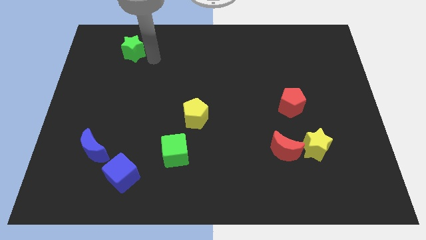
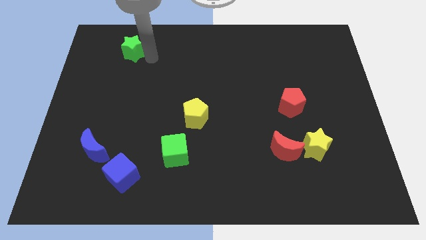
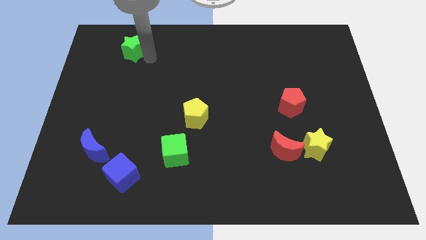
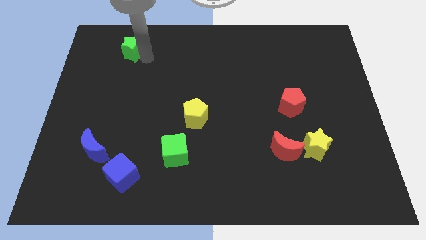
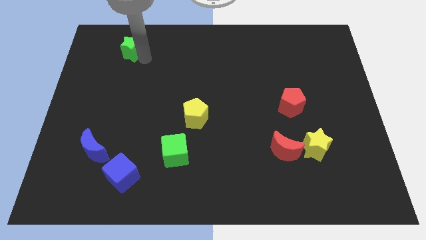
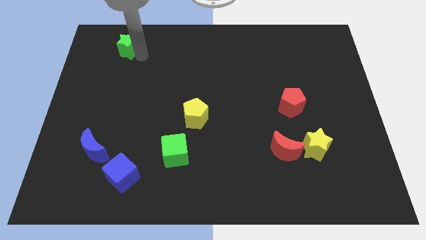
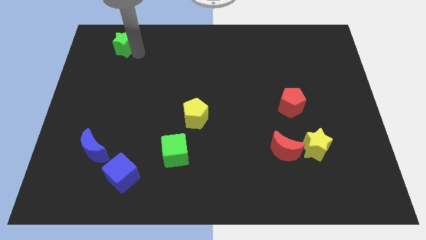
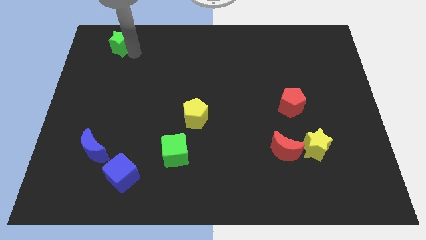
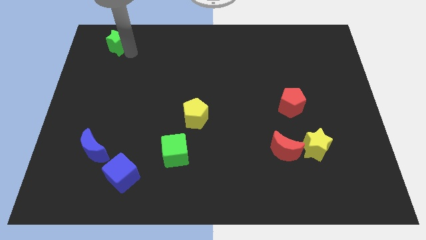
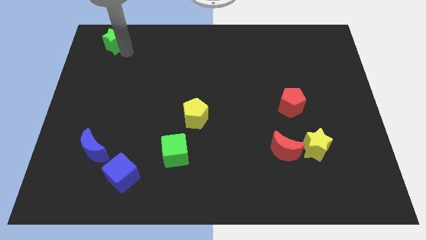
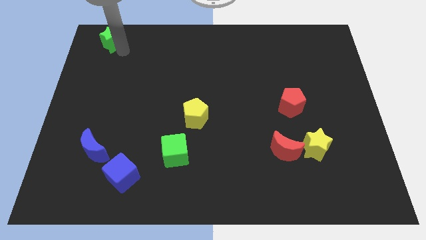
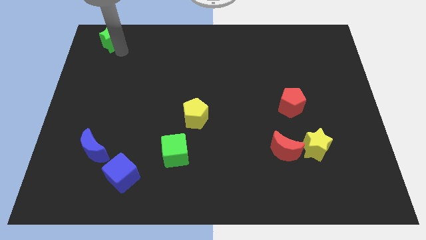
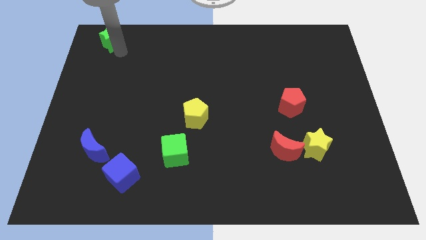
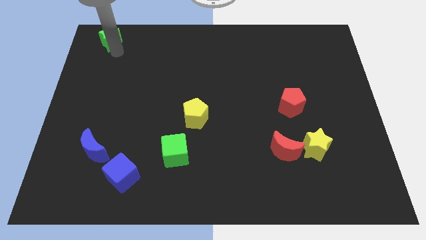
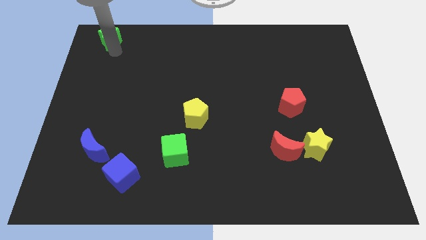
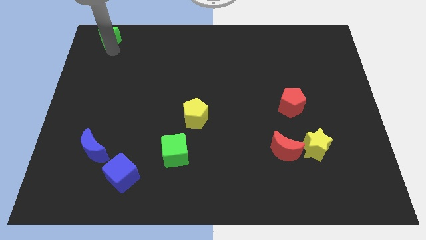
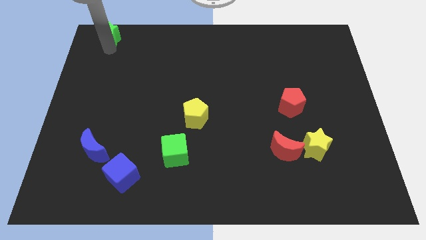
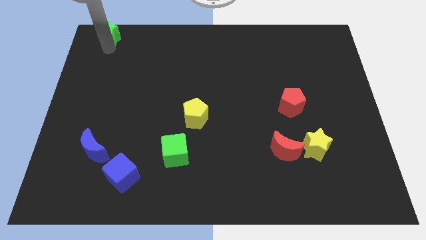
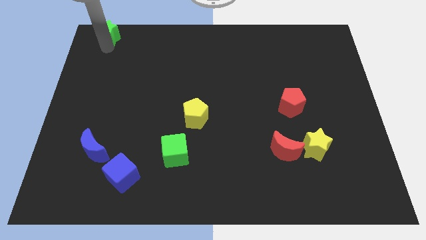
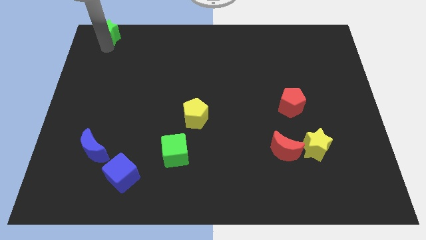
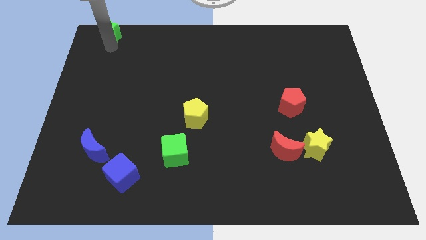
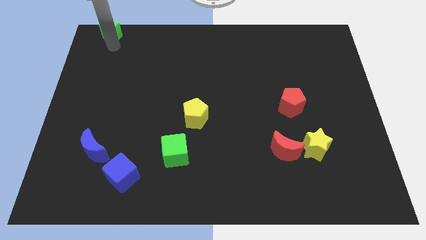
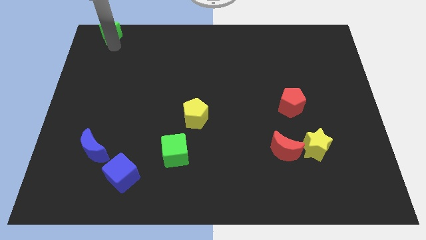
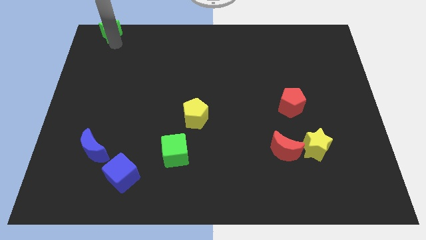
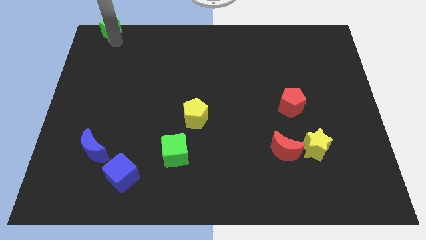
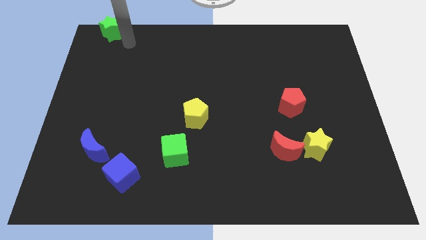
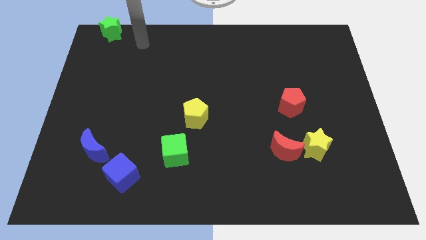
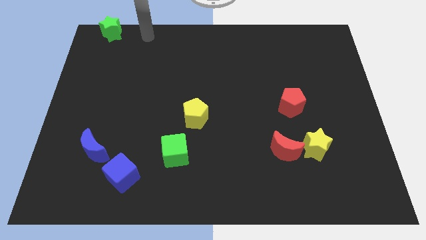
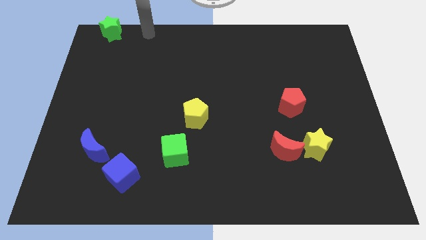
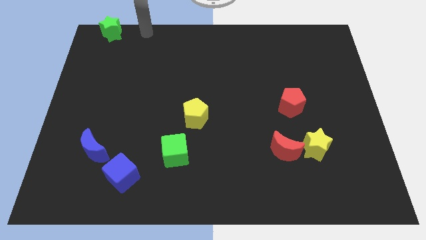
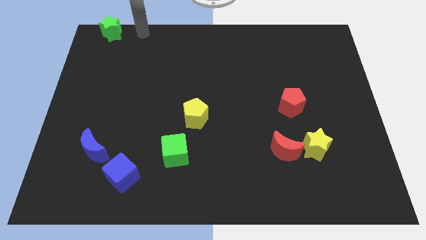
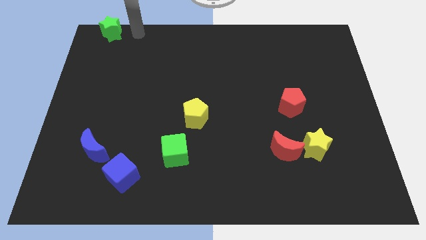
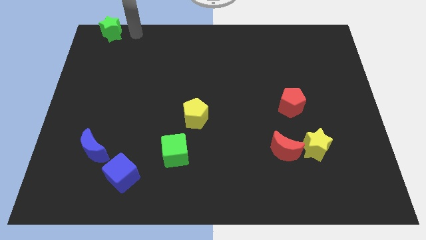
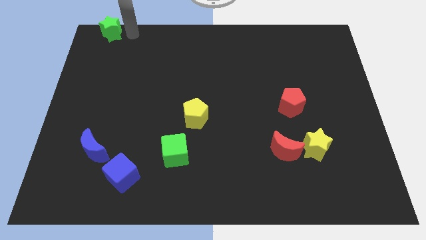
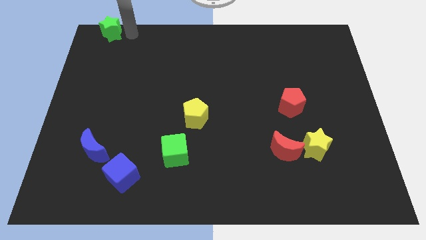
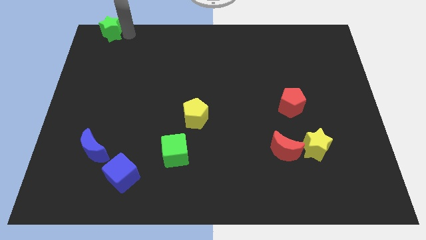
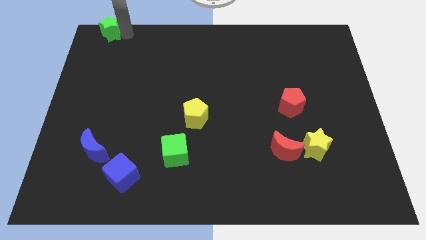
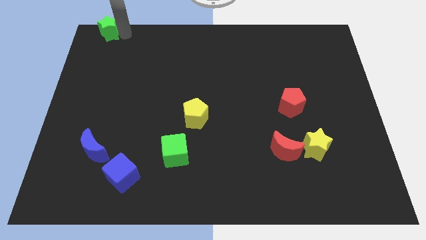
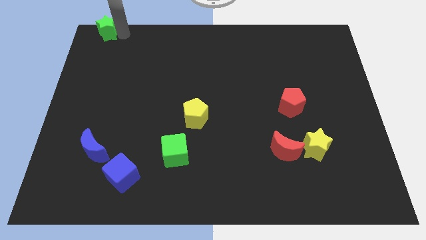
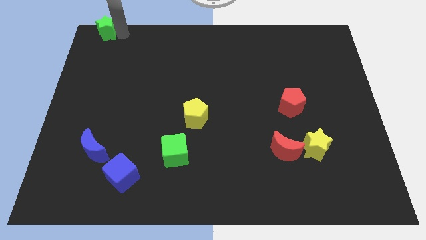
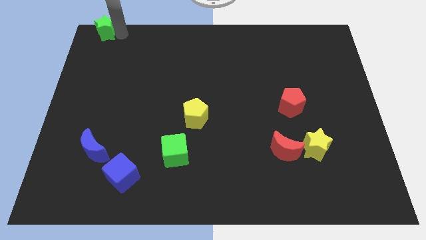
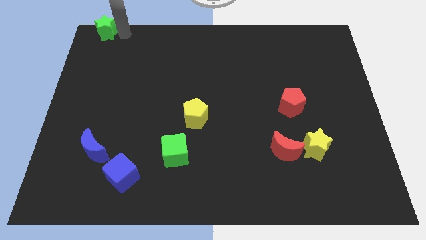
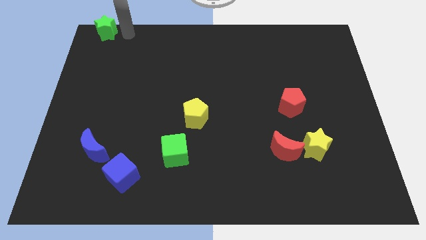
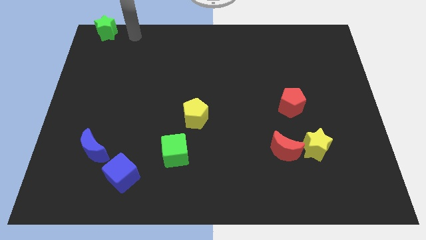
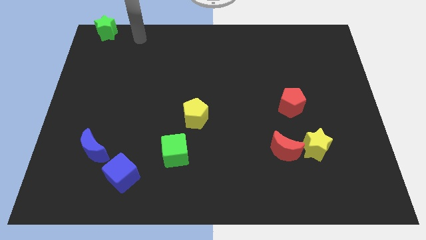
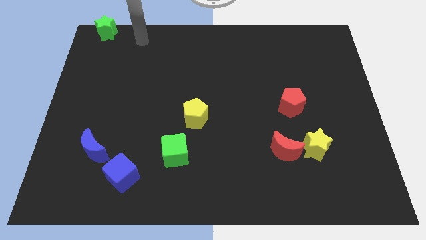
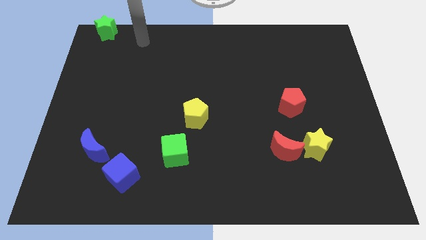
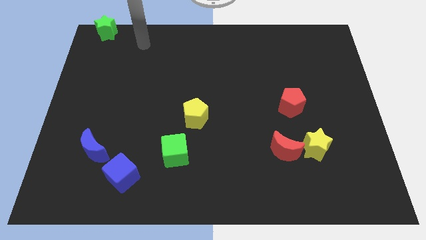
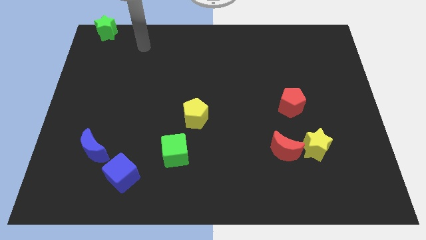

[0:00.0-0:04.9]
move the green star towards top left corner of the board

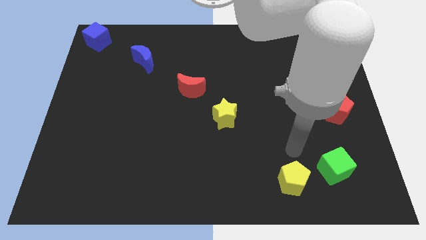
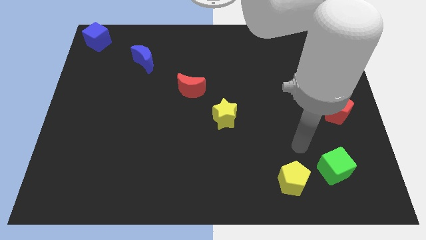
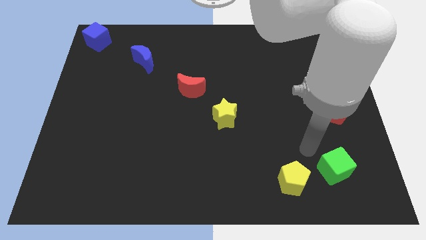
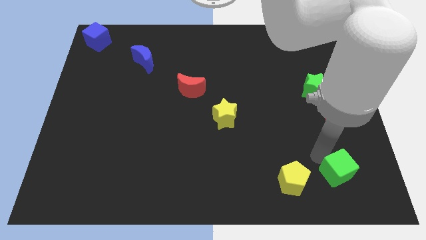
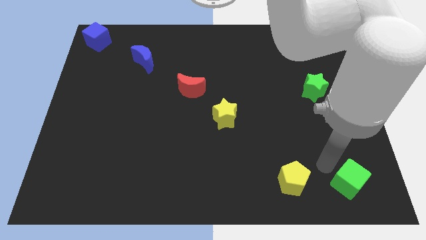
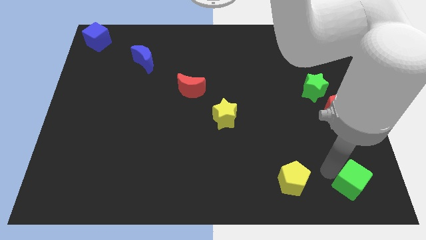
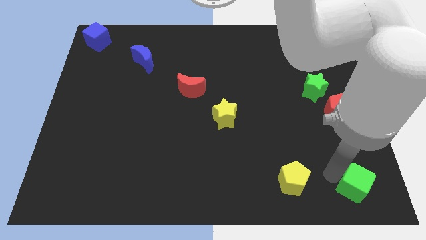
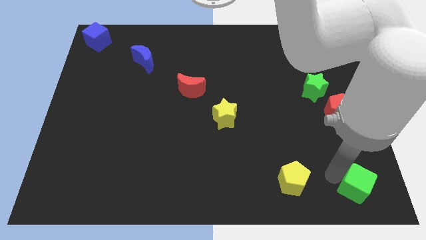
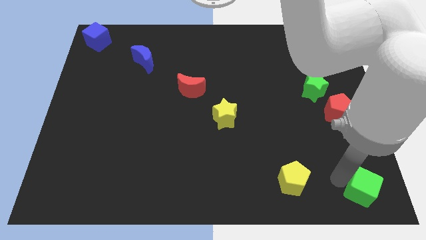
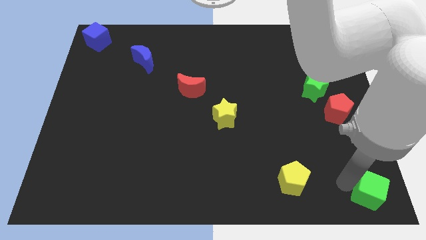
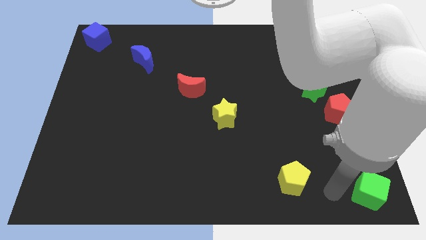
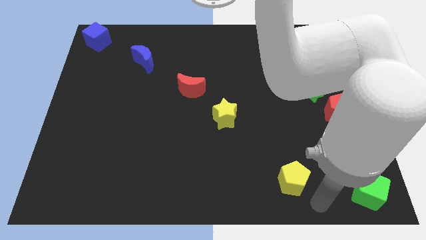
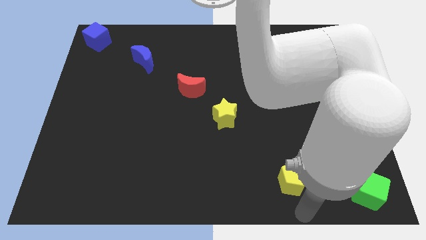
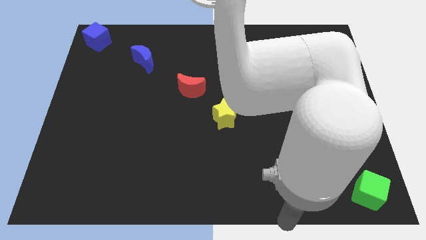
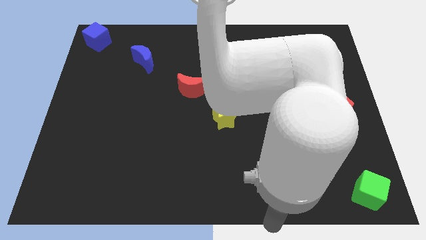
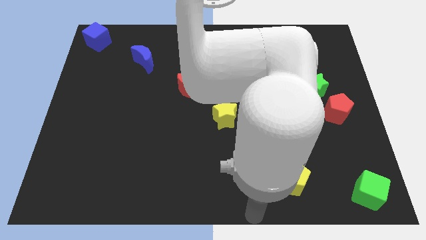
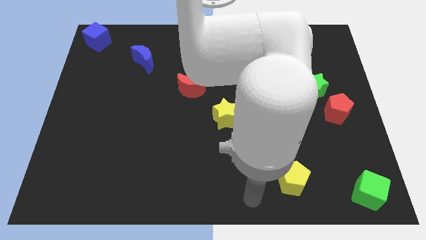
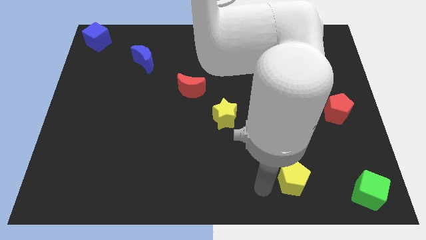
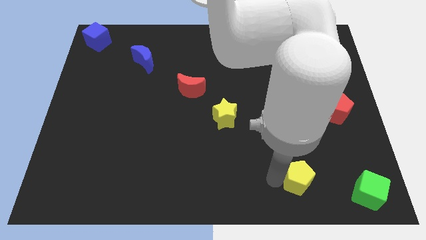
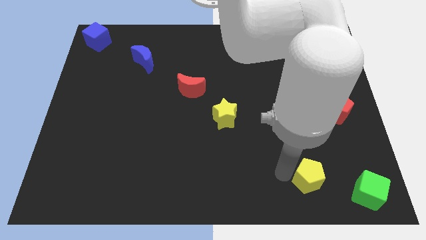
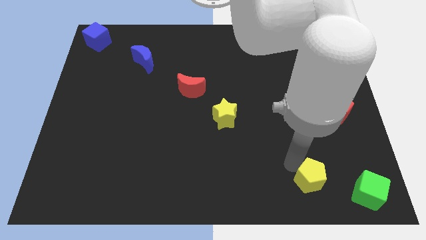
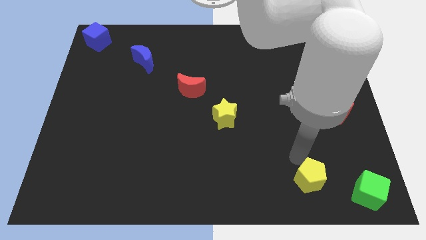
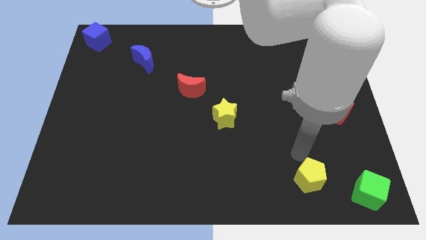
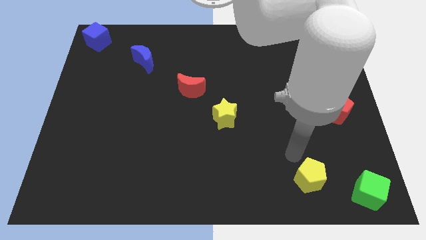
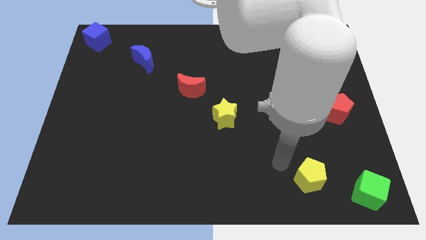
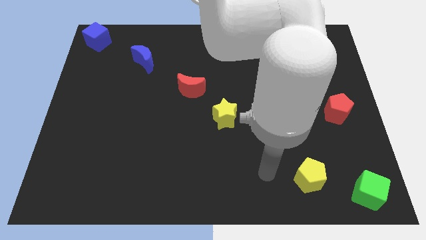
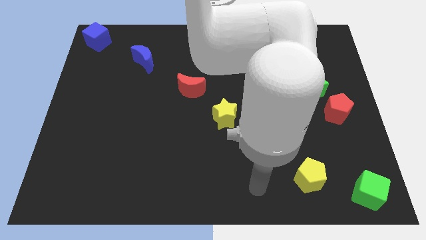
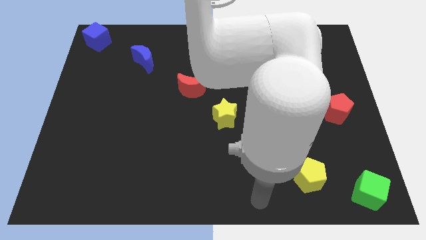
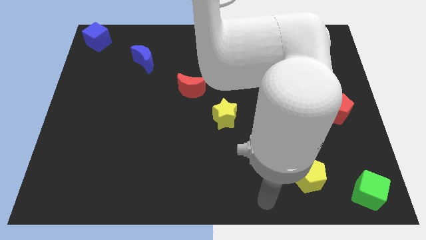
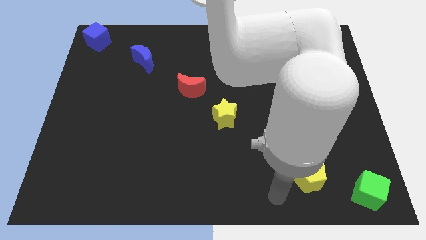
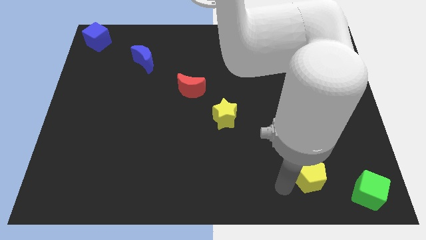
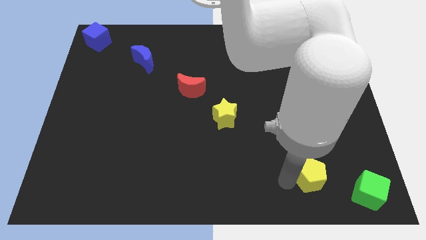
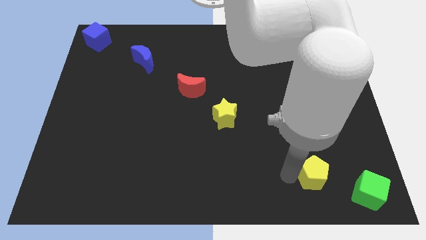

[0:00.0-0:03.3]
move yellow pentagon diagonal to green cube

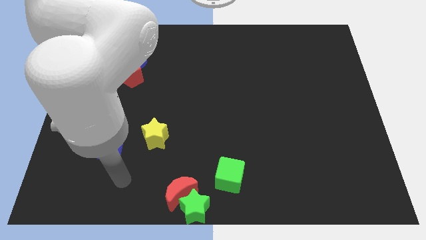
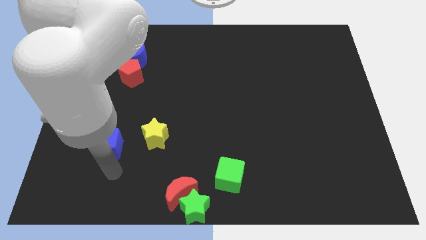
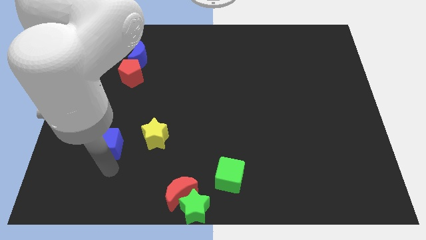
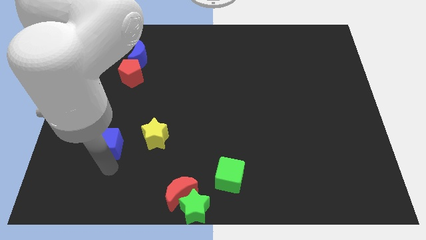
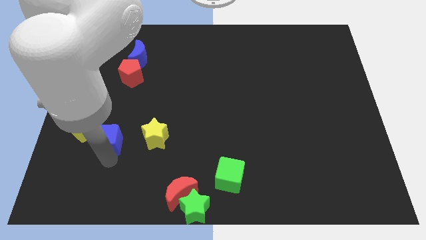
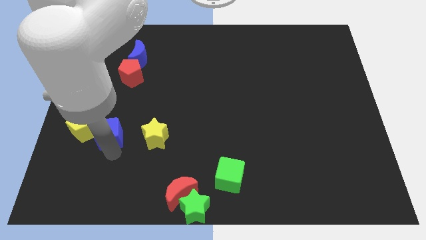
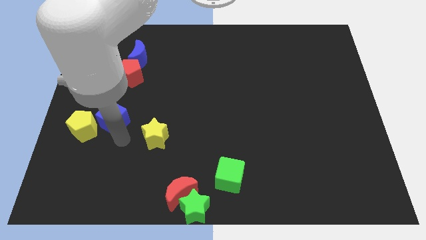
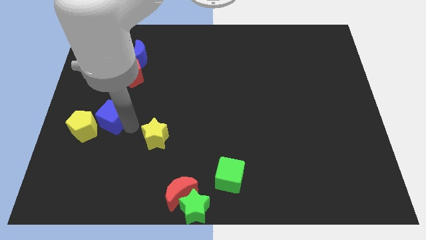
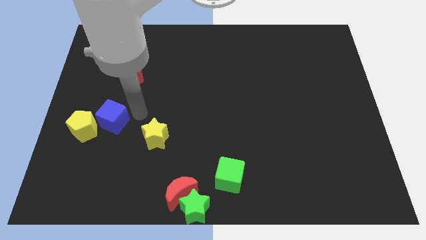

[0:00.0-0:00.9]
place the blue cube to the right of the yellow pentagon
